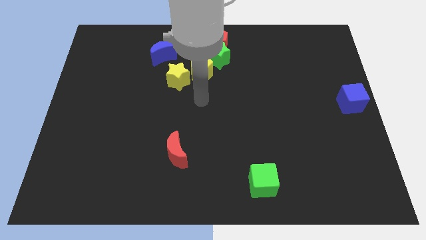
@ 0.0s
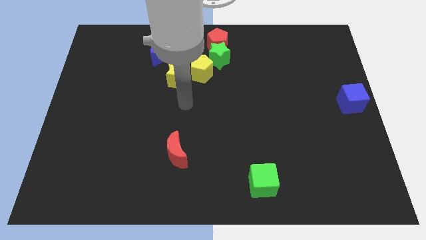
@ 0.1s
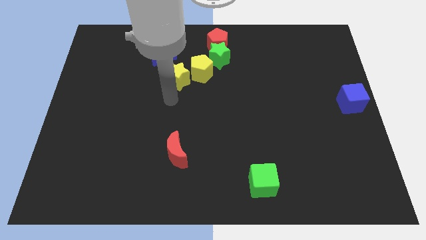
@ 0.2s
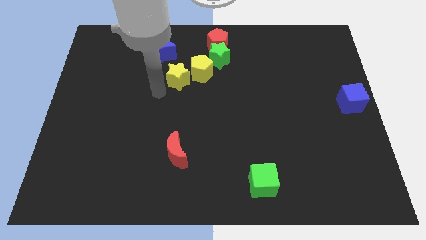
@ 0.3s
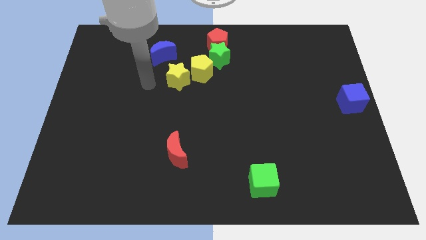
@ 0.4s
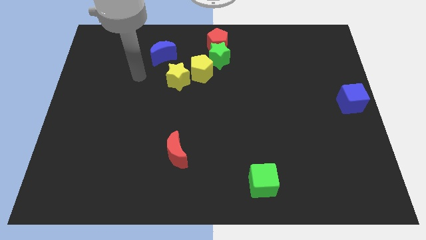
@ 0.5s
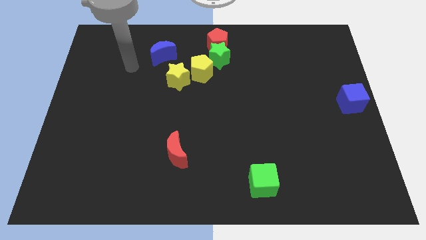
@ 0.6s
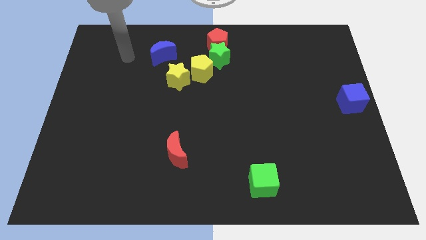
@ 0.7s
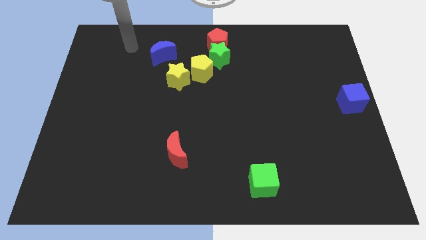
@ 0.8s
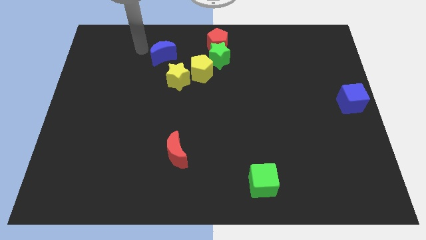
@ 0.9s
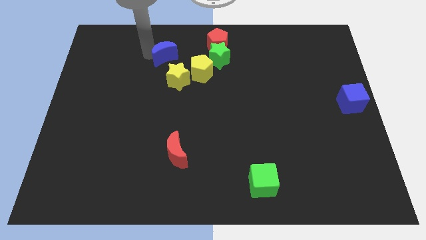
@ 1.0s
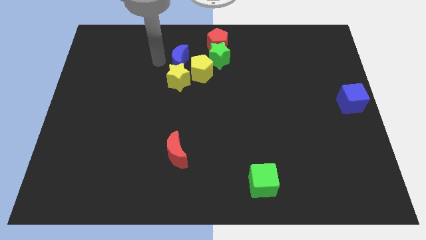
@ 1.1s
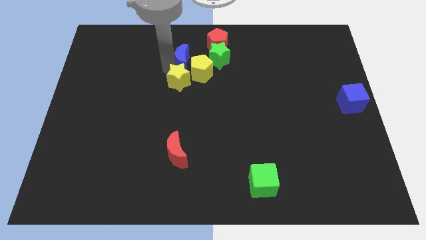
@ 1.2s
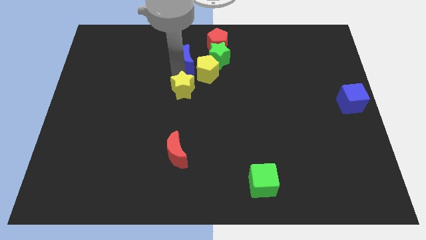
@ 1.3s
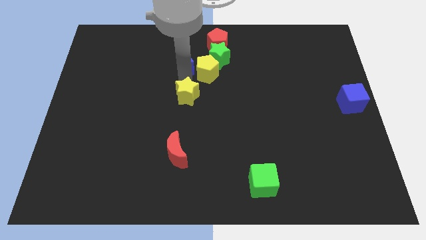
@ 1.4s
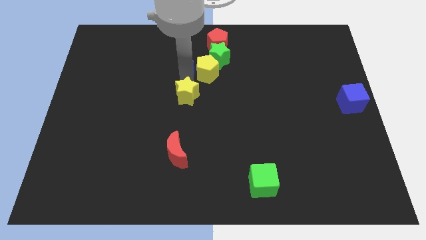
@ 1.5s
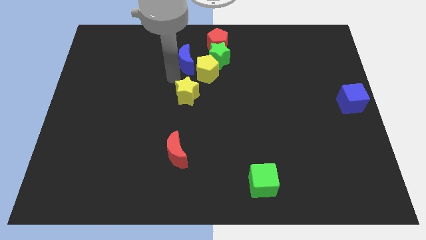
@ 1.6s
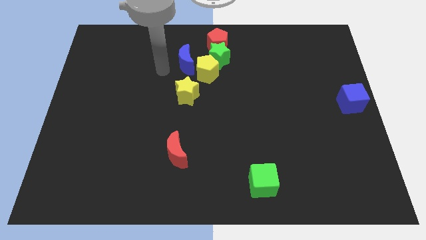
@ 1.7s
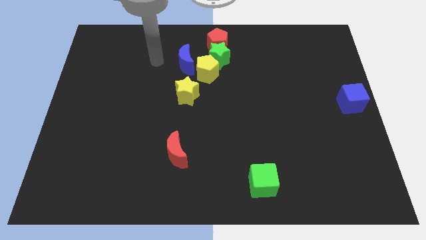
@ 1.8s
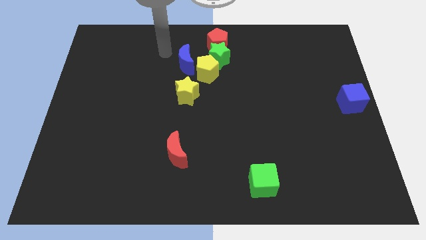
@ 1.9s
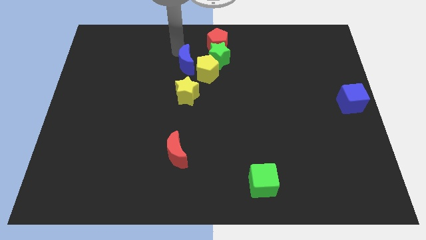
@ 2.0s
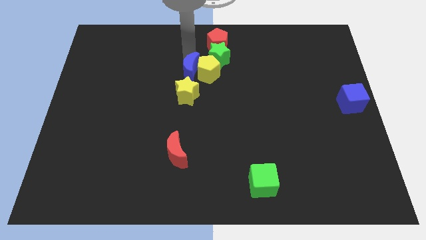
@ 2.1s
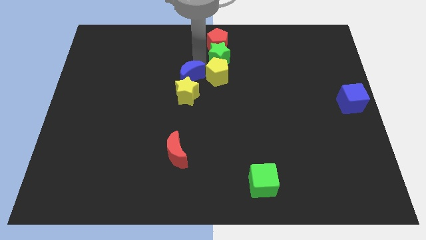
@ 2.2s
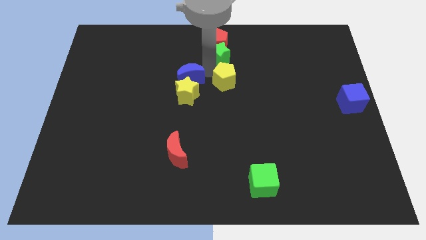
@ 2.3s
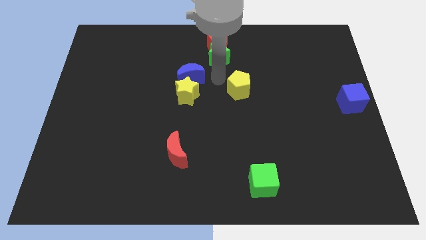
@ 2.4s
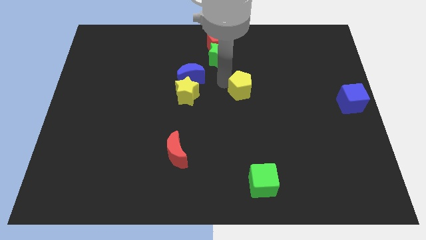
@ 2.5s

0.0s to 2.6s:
separate yellow pentagon from group of blocks

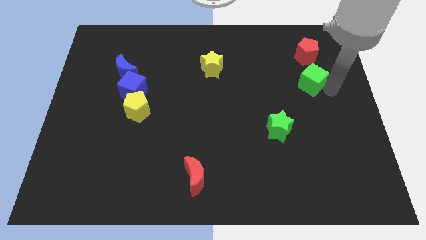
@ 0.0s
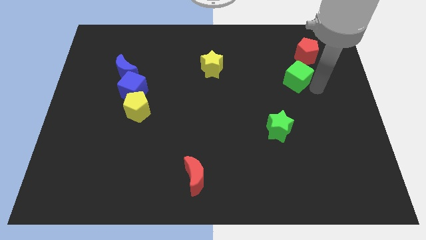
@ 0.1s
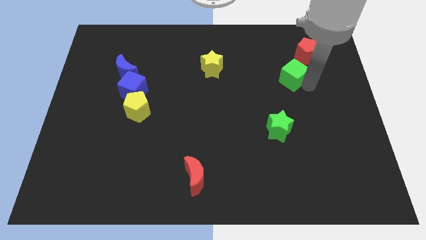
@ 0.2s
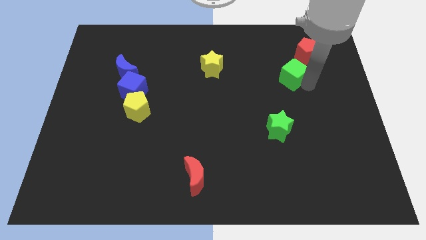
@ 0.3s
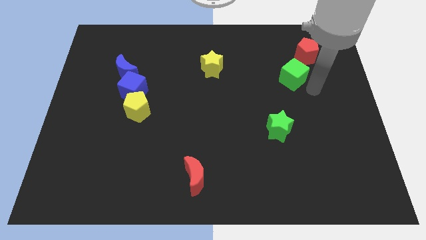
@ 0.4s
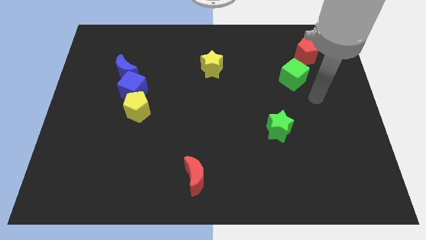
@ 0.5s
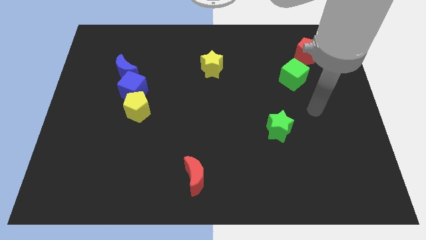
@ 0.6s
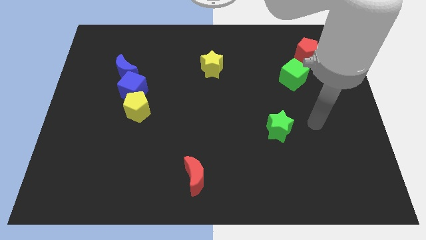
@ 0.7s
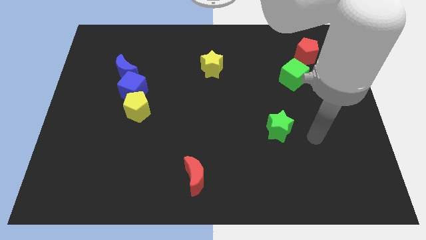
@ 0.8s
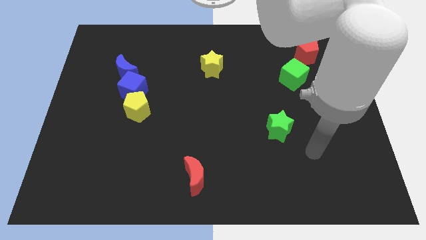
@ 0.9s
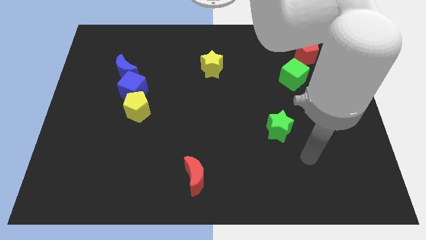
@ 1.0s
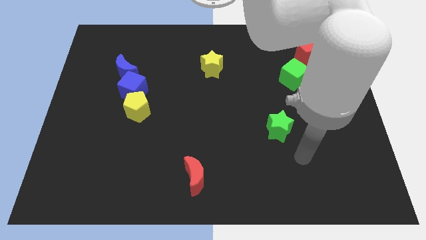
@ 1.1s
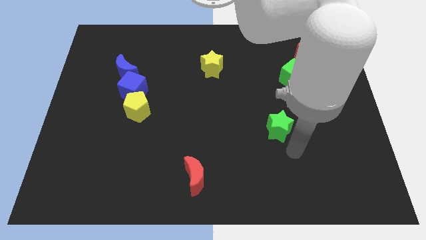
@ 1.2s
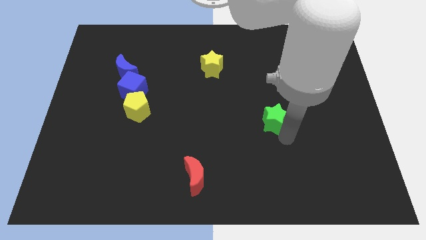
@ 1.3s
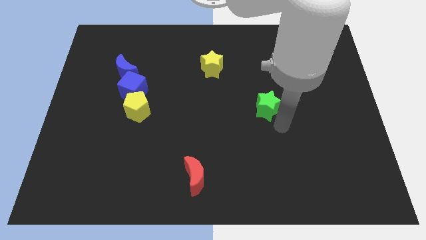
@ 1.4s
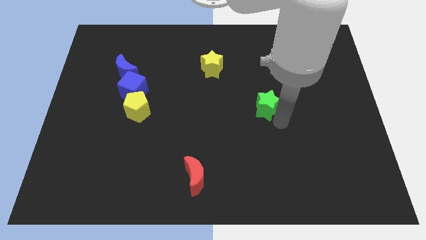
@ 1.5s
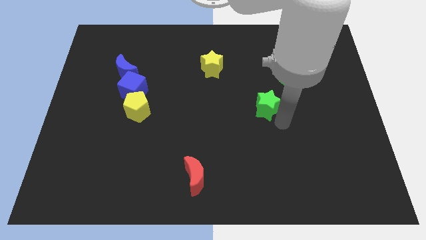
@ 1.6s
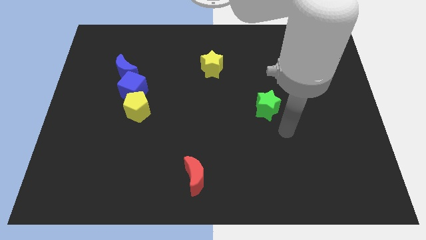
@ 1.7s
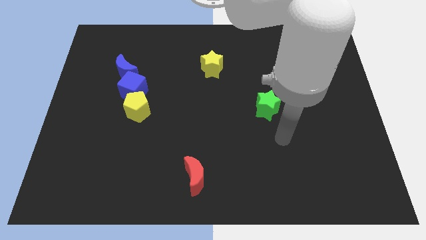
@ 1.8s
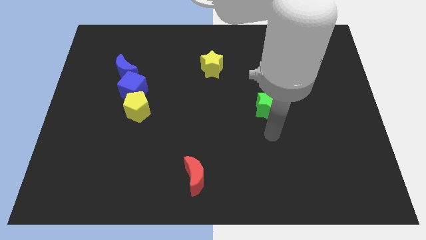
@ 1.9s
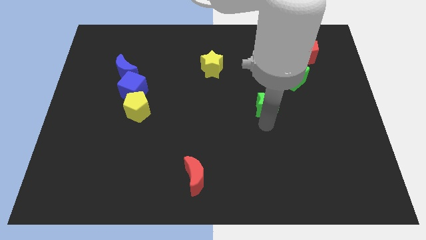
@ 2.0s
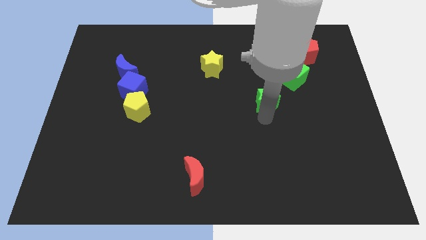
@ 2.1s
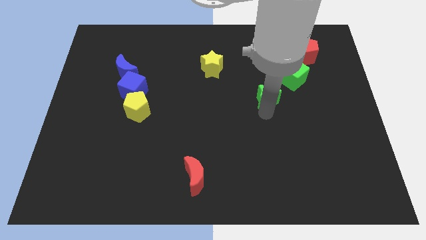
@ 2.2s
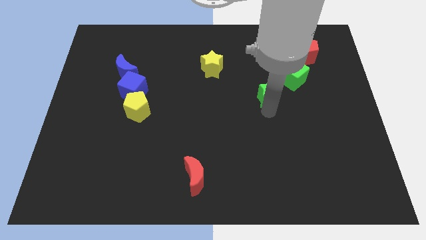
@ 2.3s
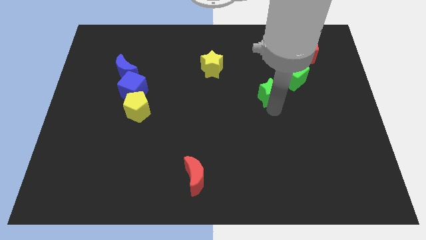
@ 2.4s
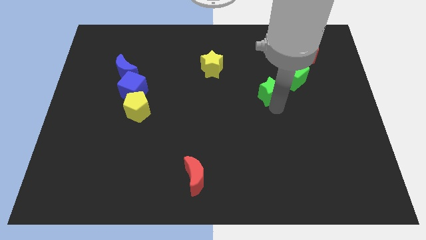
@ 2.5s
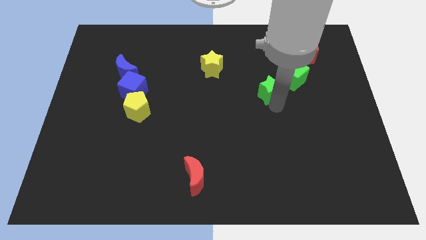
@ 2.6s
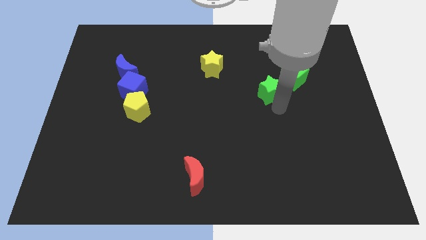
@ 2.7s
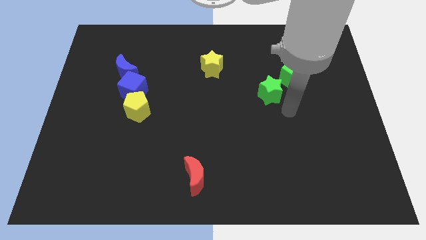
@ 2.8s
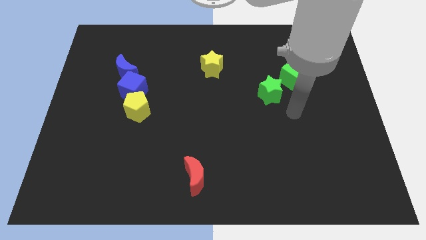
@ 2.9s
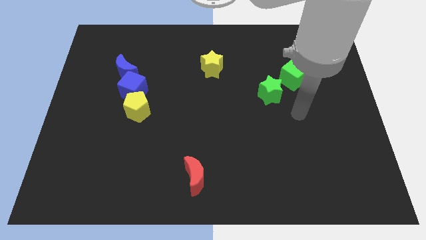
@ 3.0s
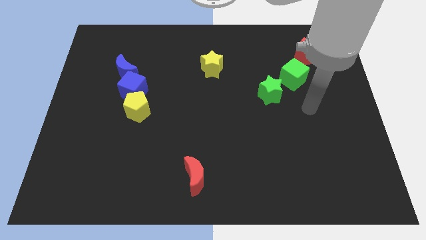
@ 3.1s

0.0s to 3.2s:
place green star to the bottom left of green cube

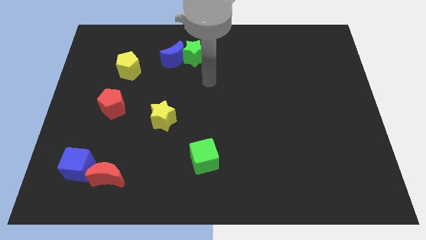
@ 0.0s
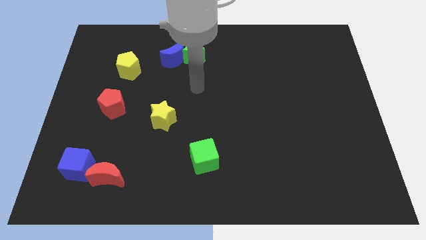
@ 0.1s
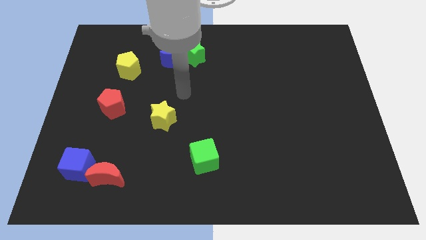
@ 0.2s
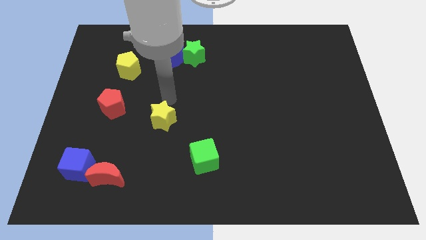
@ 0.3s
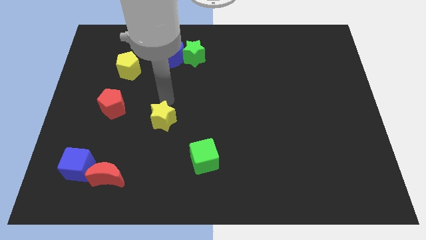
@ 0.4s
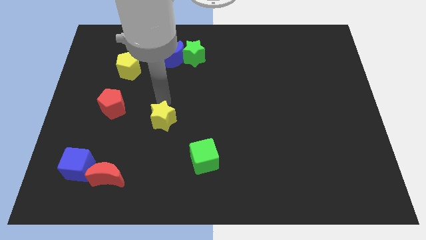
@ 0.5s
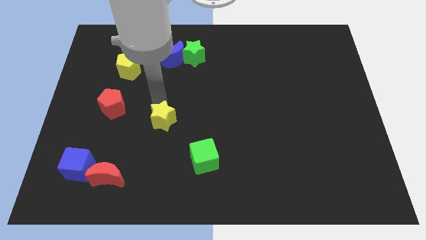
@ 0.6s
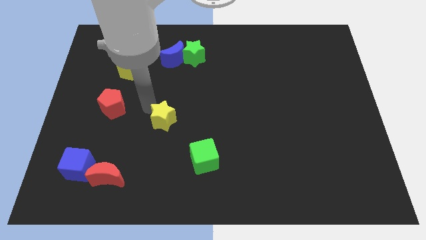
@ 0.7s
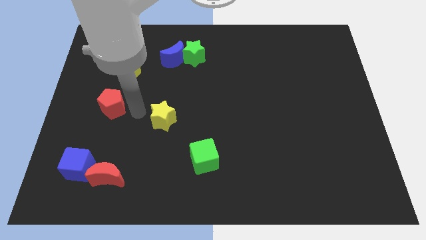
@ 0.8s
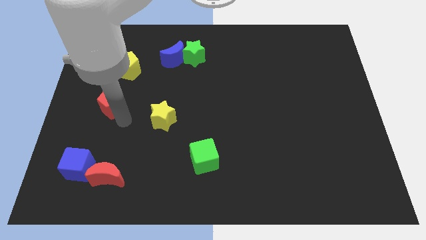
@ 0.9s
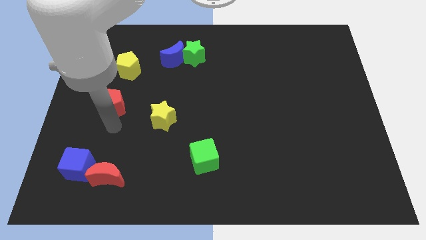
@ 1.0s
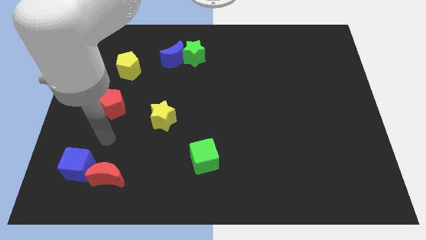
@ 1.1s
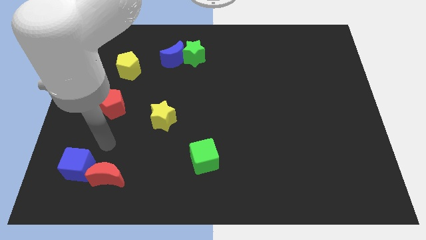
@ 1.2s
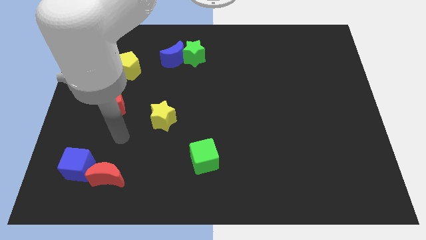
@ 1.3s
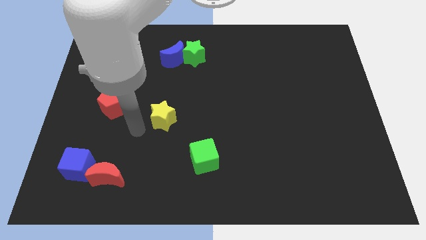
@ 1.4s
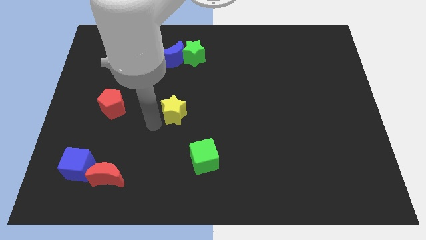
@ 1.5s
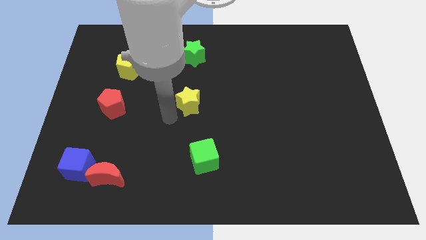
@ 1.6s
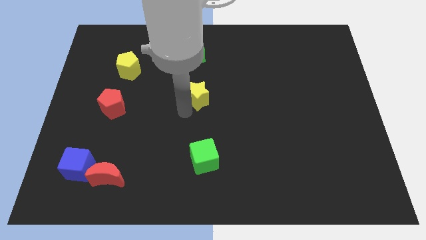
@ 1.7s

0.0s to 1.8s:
place the yellow star above the green cube

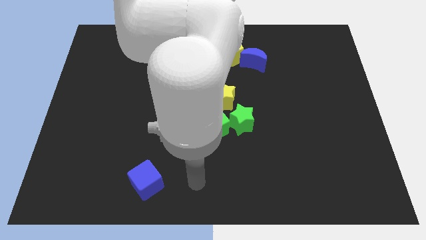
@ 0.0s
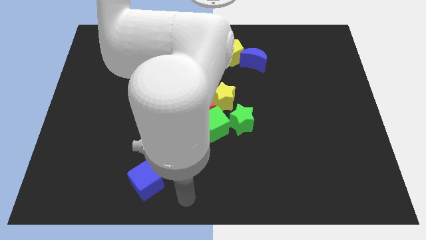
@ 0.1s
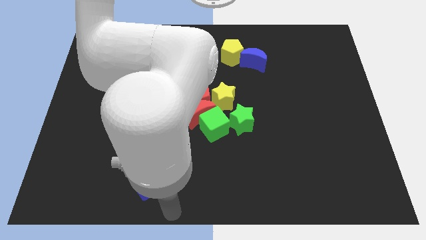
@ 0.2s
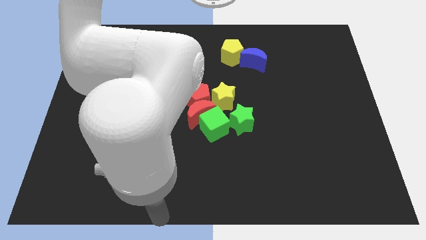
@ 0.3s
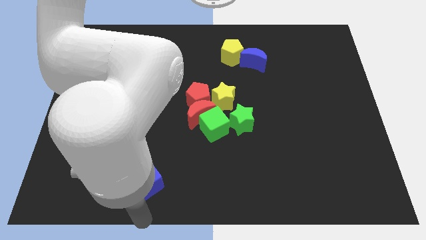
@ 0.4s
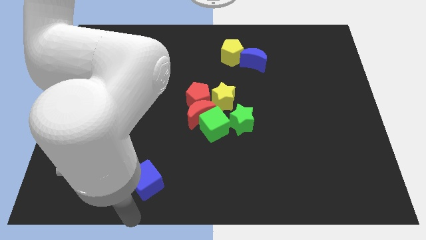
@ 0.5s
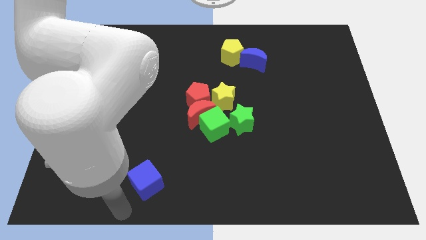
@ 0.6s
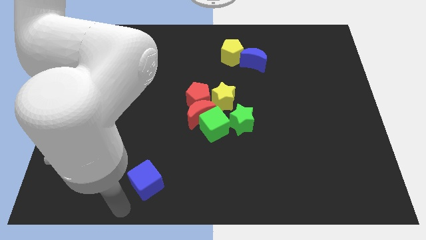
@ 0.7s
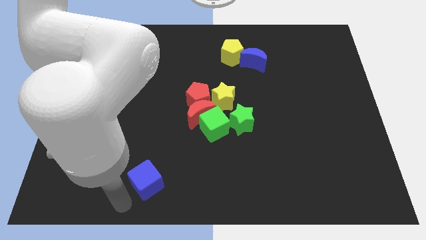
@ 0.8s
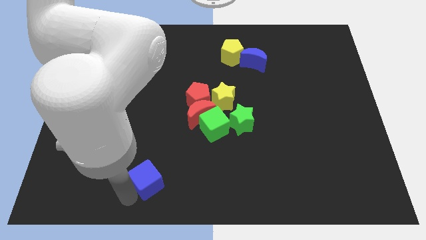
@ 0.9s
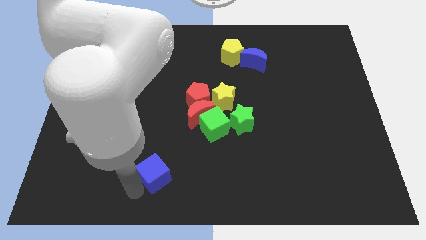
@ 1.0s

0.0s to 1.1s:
touch the bottom of blue cube

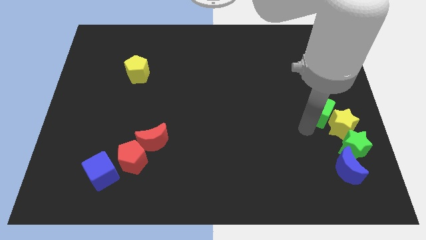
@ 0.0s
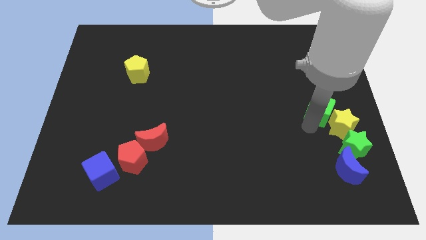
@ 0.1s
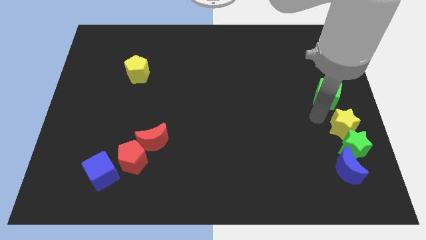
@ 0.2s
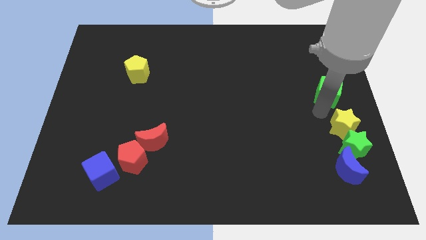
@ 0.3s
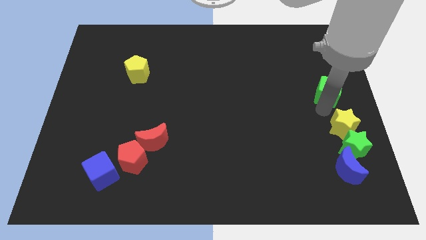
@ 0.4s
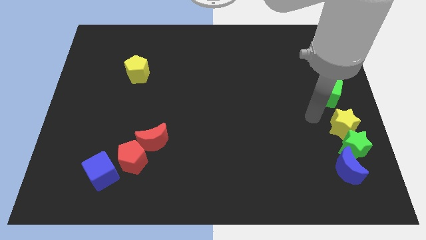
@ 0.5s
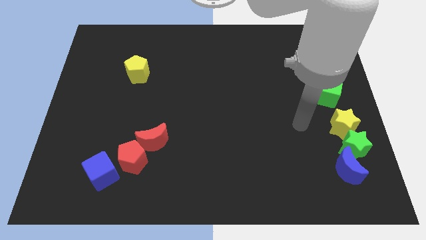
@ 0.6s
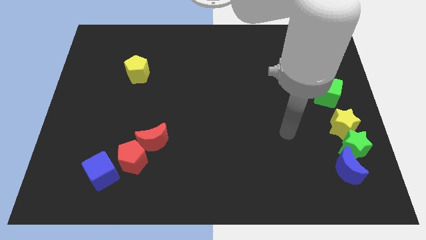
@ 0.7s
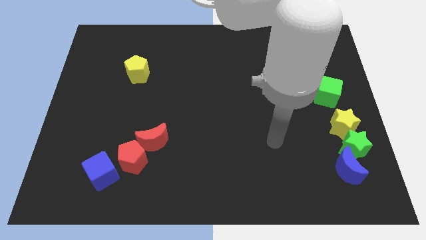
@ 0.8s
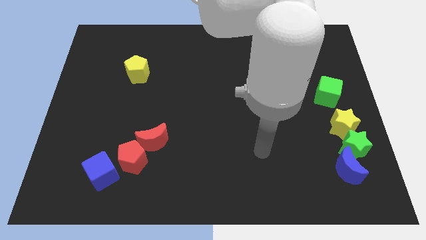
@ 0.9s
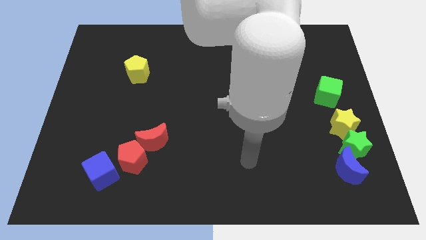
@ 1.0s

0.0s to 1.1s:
push the green cube to the top of the yellow star
